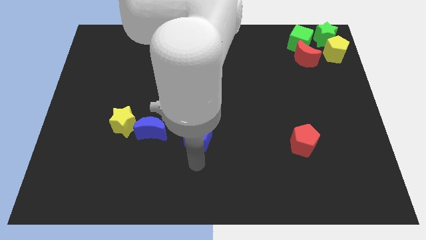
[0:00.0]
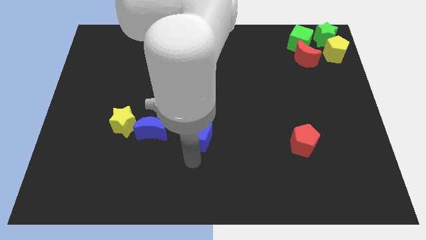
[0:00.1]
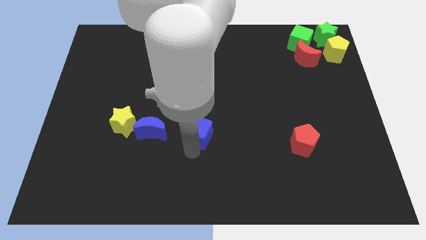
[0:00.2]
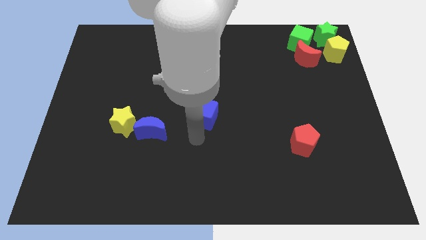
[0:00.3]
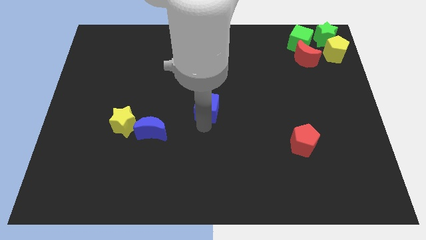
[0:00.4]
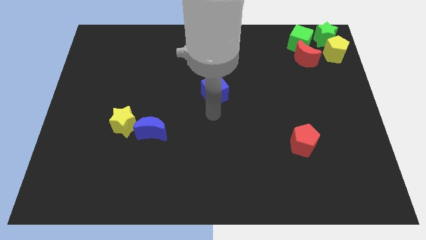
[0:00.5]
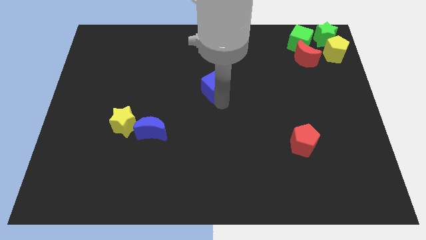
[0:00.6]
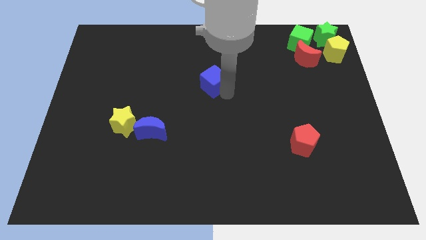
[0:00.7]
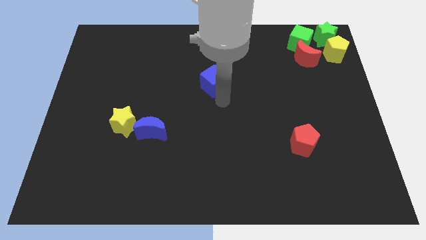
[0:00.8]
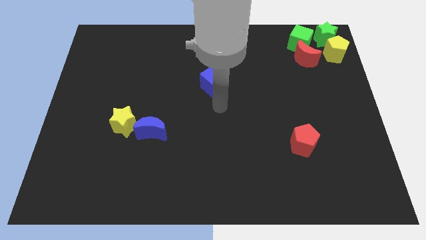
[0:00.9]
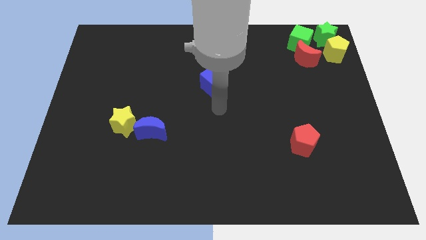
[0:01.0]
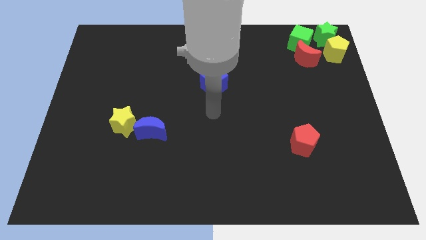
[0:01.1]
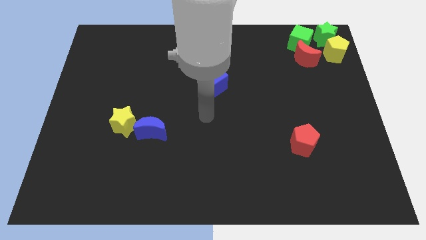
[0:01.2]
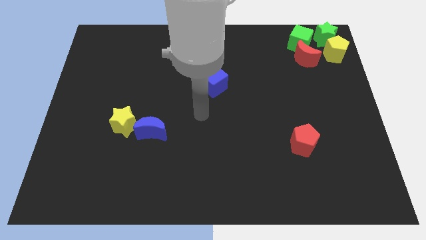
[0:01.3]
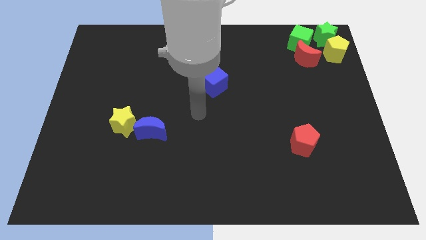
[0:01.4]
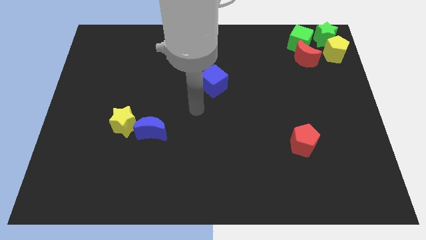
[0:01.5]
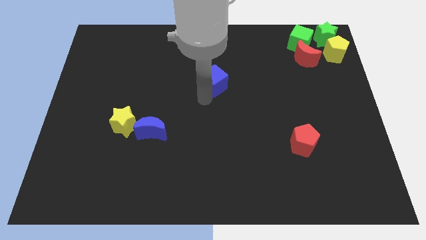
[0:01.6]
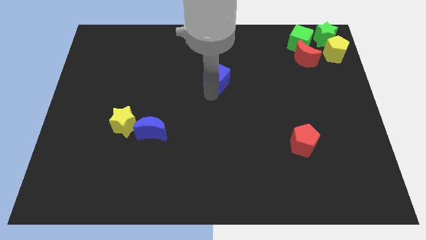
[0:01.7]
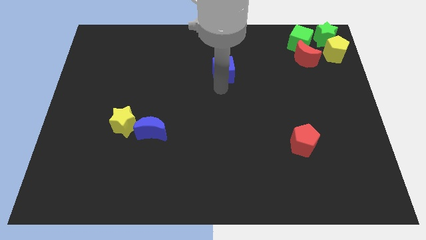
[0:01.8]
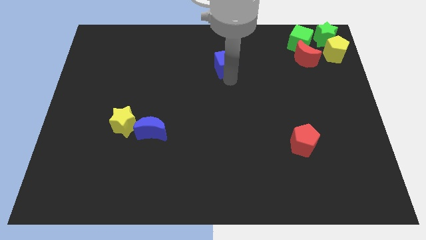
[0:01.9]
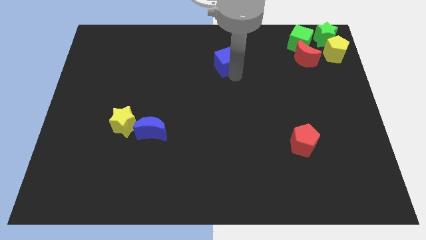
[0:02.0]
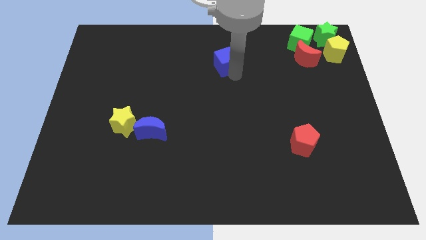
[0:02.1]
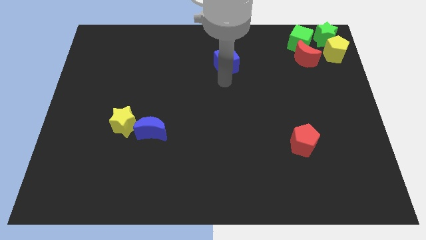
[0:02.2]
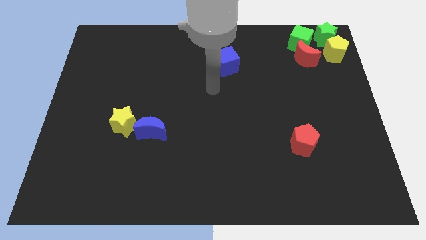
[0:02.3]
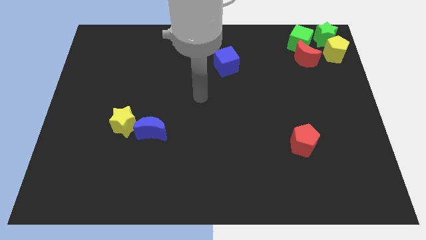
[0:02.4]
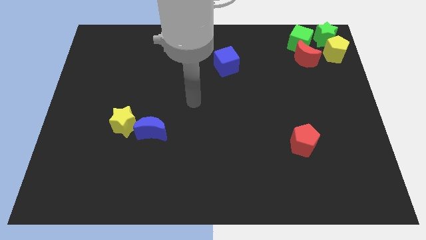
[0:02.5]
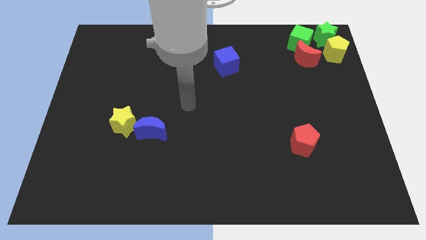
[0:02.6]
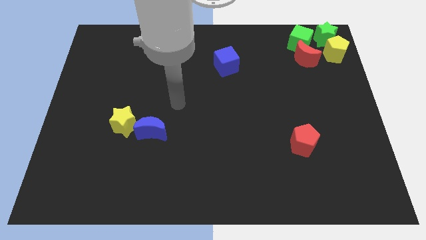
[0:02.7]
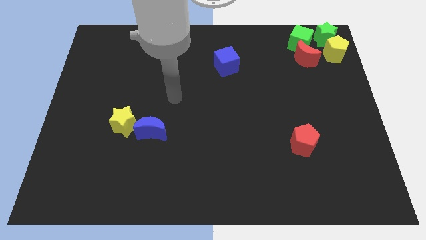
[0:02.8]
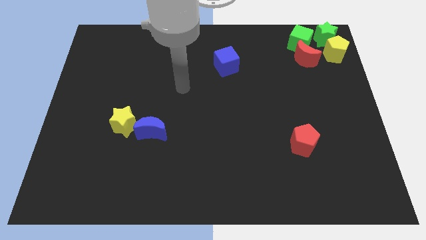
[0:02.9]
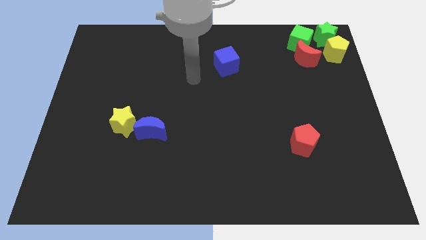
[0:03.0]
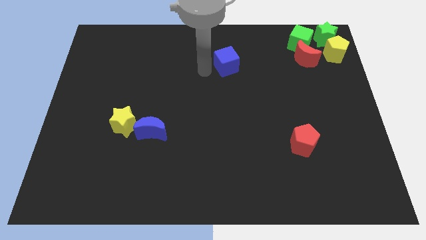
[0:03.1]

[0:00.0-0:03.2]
move the blue cube to the top center of the board

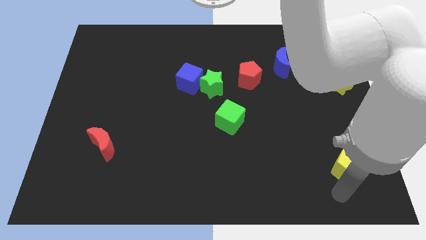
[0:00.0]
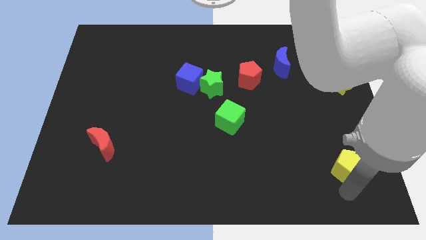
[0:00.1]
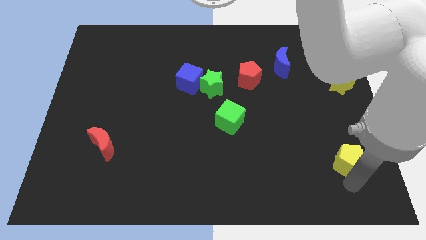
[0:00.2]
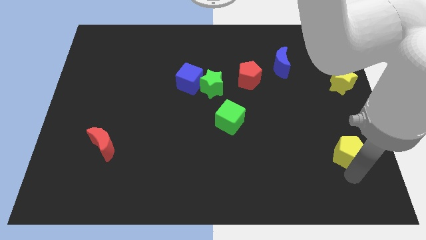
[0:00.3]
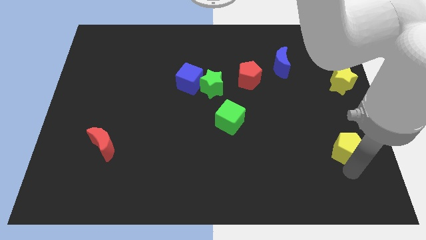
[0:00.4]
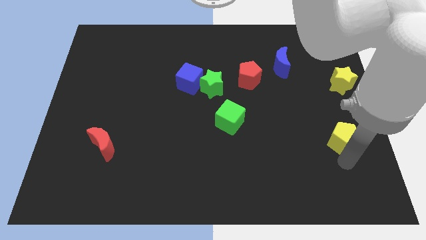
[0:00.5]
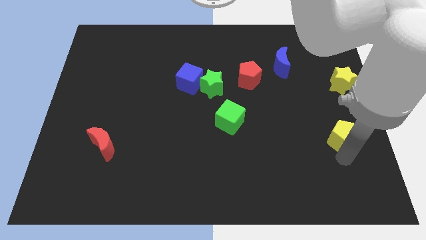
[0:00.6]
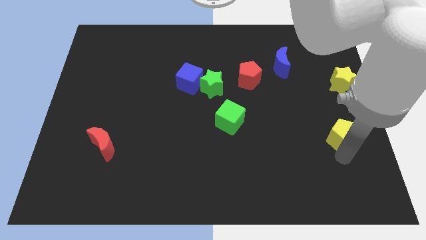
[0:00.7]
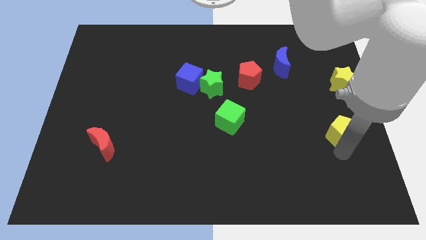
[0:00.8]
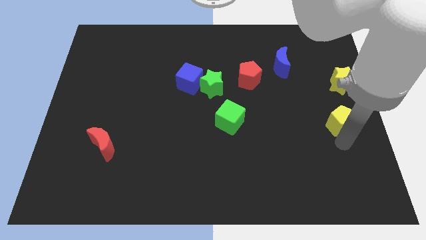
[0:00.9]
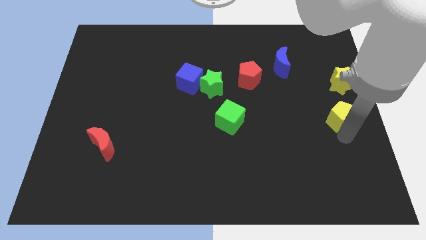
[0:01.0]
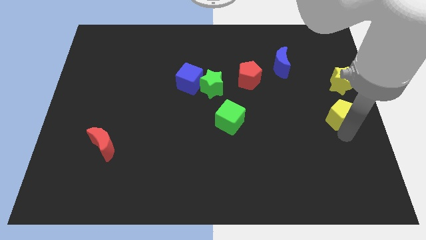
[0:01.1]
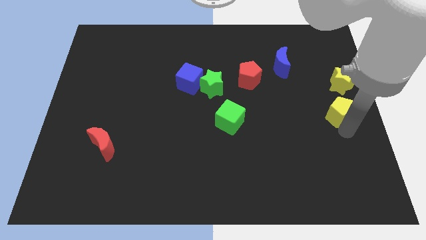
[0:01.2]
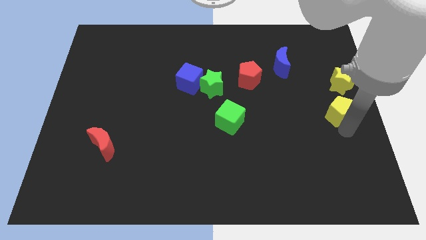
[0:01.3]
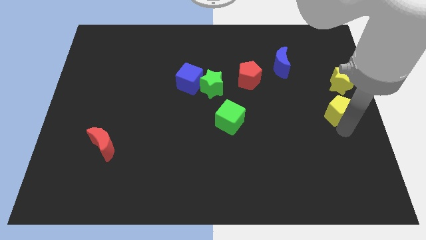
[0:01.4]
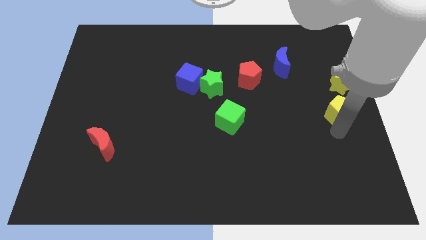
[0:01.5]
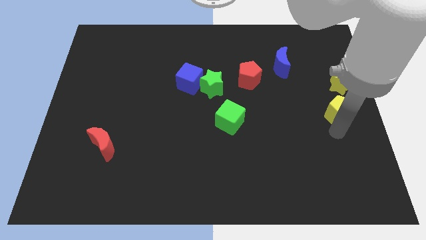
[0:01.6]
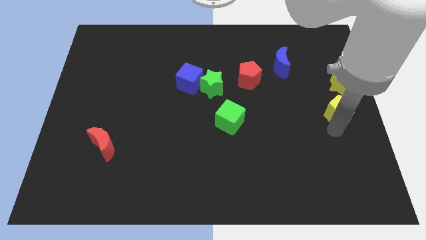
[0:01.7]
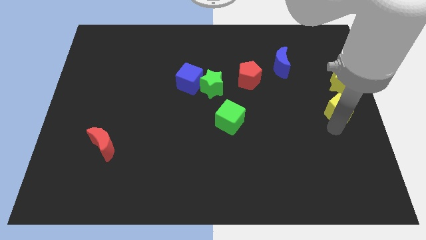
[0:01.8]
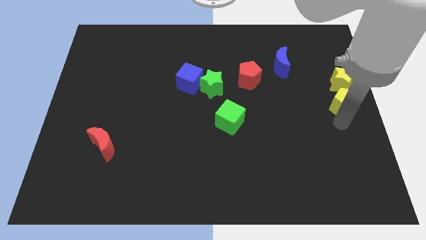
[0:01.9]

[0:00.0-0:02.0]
push yellow pentagon below yellow star

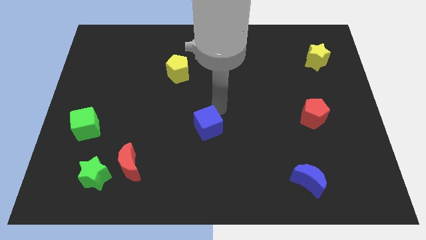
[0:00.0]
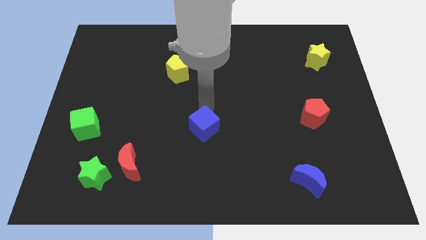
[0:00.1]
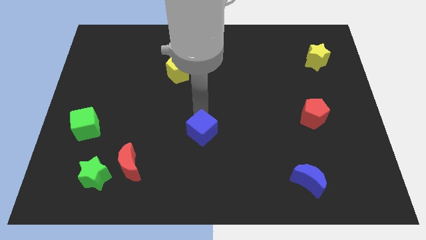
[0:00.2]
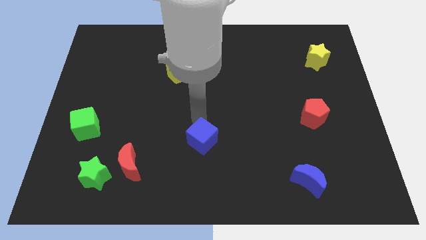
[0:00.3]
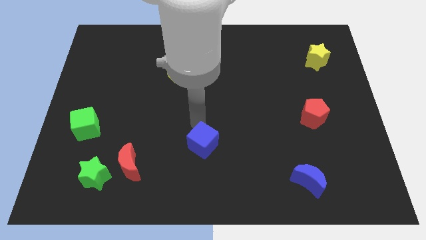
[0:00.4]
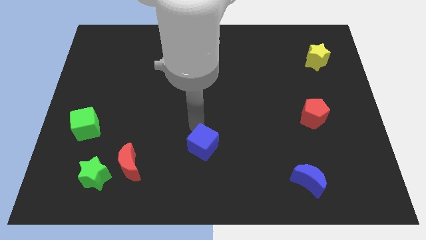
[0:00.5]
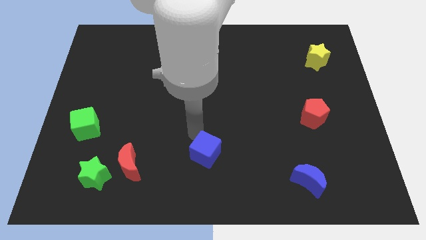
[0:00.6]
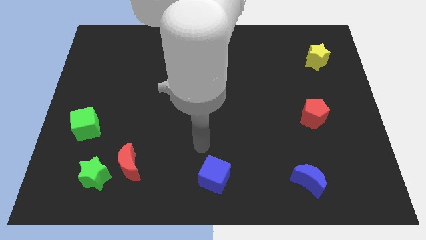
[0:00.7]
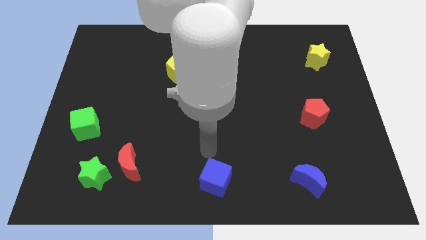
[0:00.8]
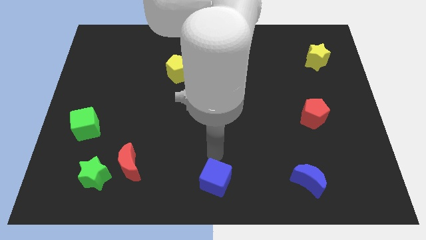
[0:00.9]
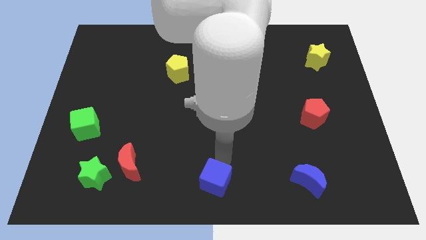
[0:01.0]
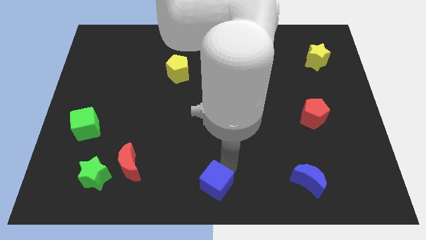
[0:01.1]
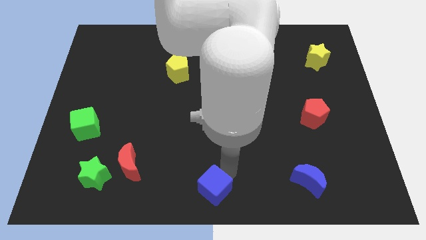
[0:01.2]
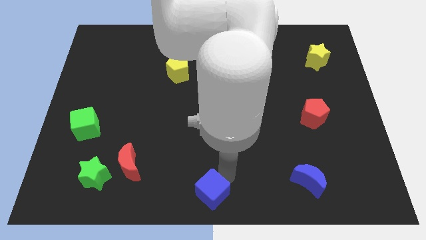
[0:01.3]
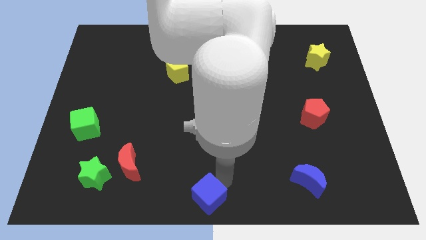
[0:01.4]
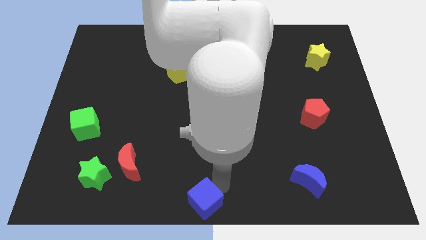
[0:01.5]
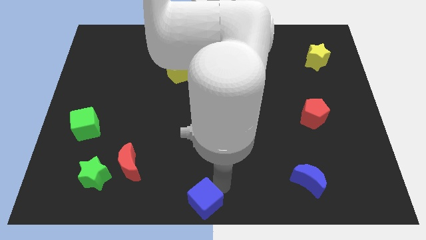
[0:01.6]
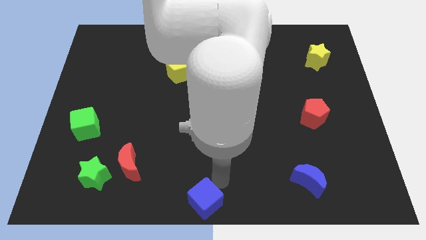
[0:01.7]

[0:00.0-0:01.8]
push the blue cube to the bottom center of the board

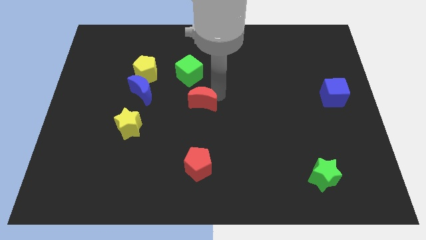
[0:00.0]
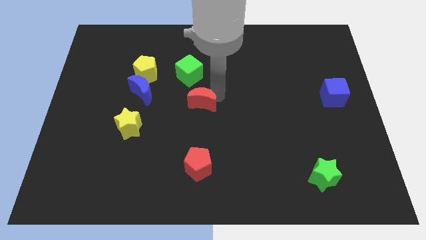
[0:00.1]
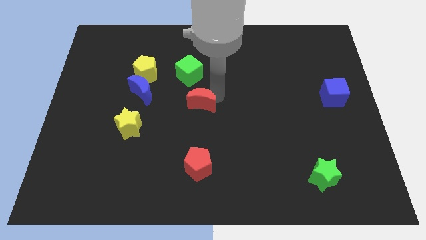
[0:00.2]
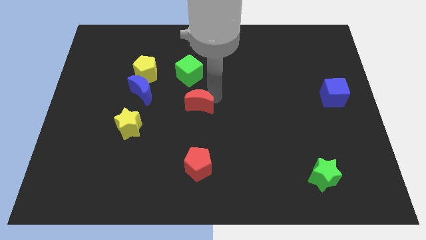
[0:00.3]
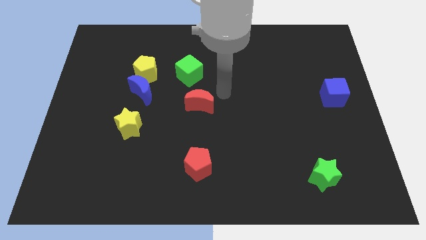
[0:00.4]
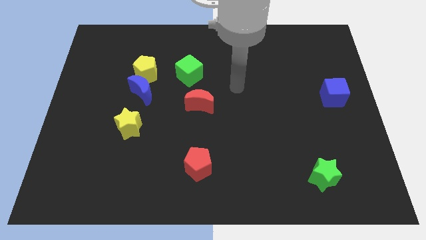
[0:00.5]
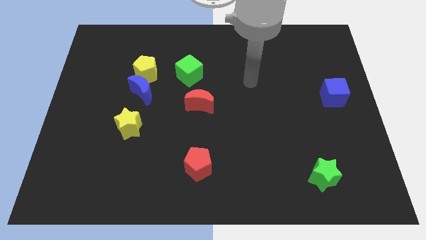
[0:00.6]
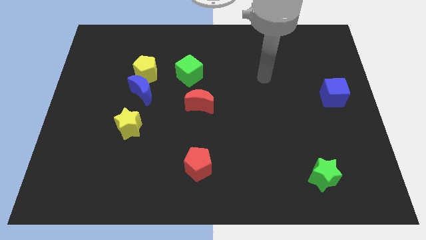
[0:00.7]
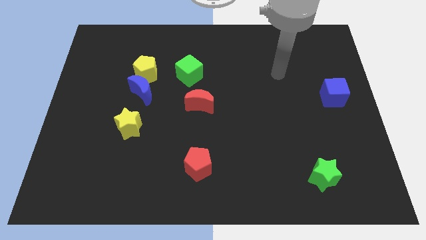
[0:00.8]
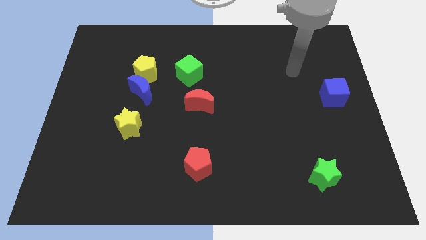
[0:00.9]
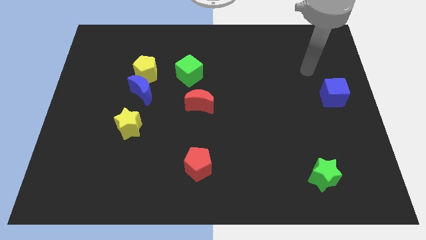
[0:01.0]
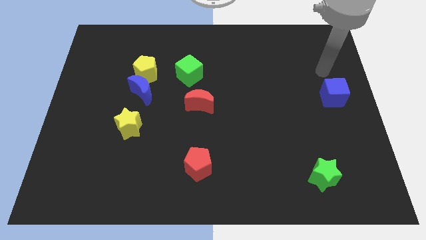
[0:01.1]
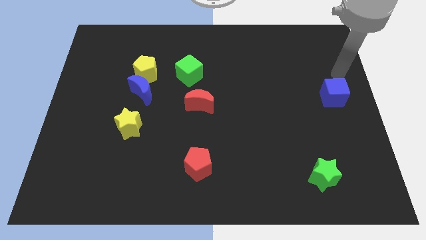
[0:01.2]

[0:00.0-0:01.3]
move the arm above the blue cube

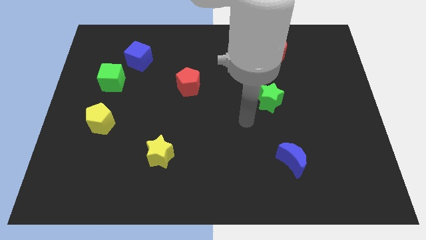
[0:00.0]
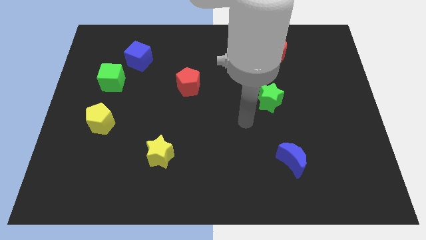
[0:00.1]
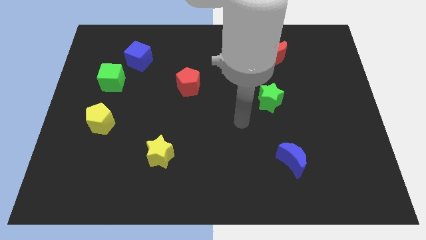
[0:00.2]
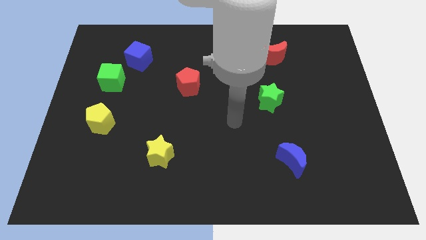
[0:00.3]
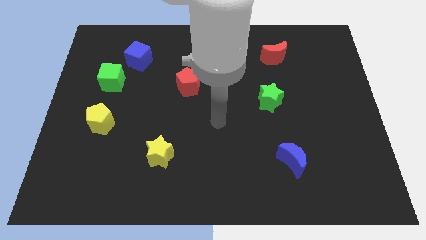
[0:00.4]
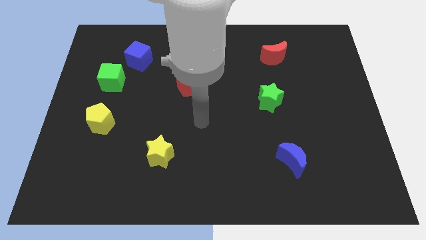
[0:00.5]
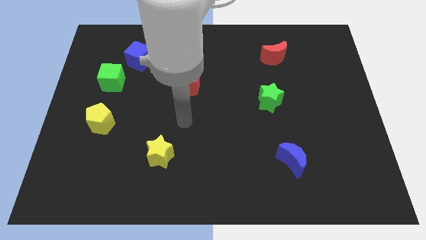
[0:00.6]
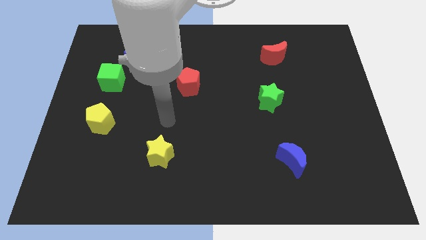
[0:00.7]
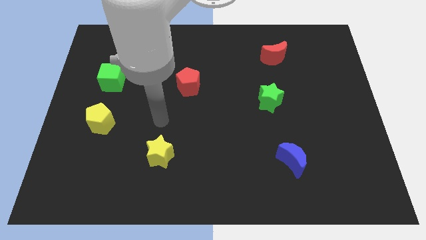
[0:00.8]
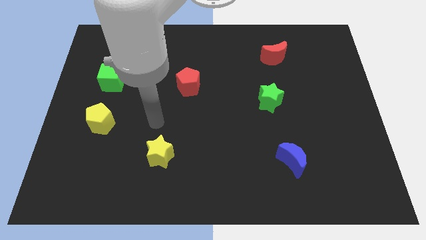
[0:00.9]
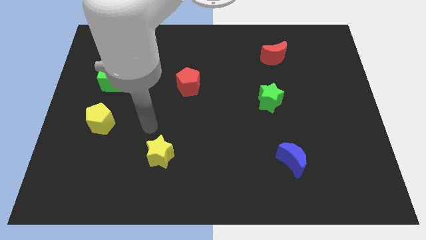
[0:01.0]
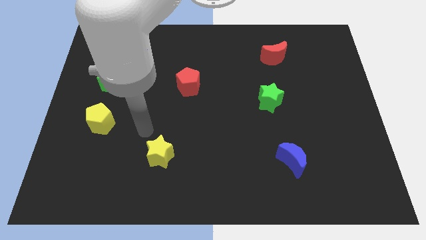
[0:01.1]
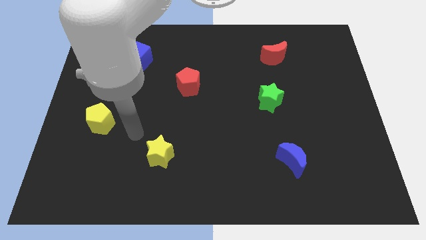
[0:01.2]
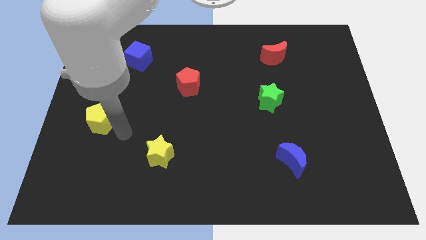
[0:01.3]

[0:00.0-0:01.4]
move your arm towards the left side of the board
